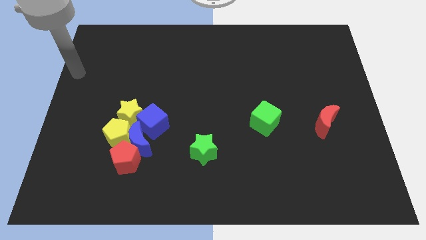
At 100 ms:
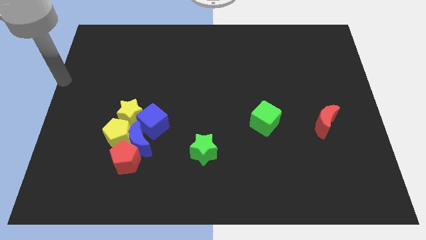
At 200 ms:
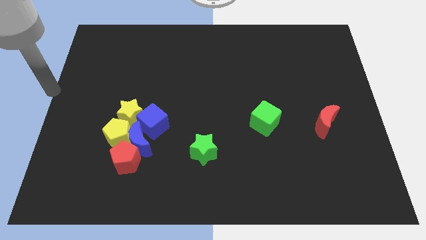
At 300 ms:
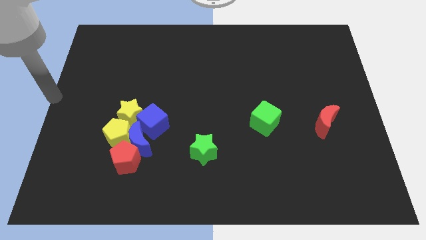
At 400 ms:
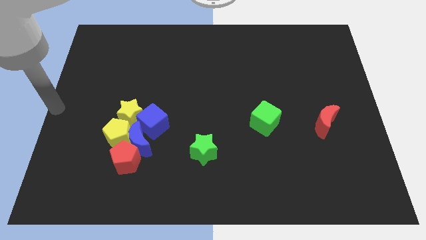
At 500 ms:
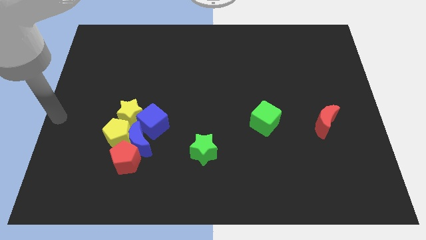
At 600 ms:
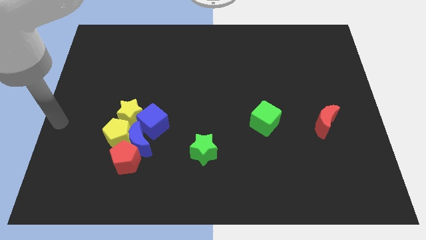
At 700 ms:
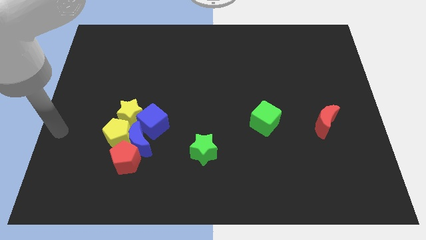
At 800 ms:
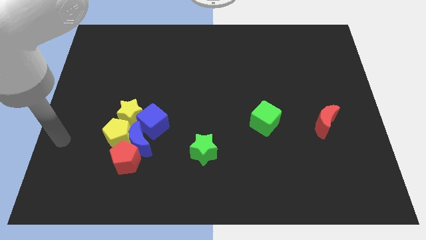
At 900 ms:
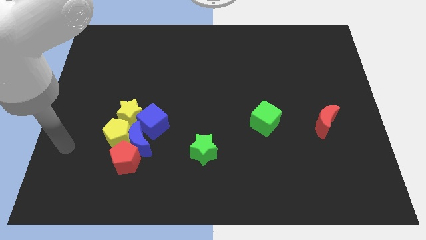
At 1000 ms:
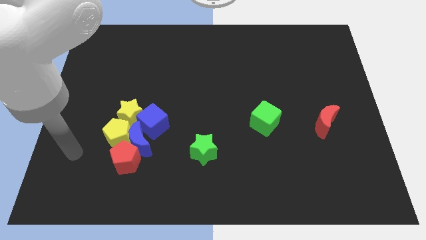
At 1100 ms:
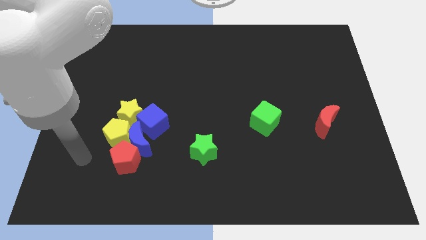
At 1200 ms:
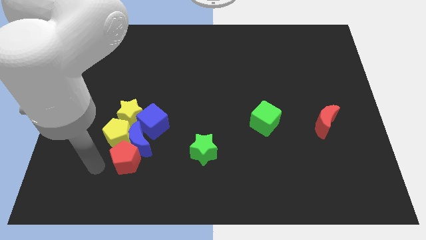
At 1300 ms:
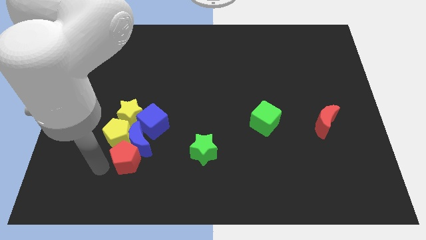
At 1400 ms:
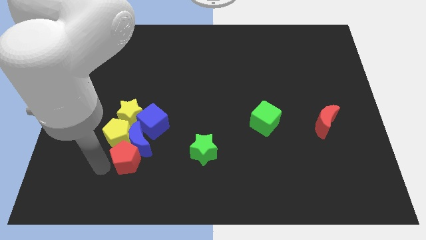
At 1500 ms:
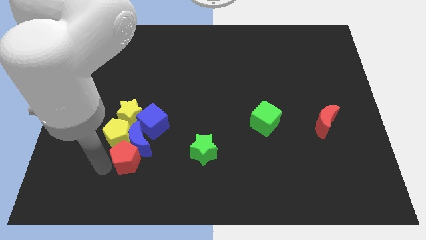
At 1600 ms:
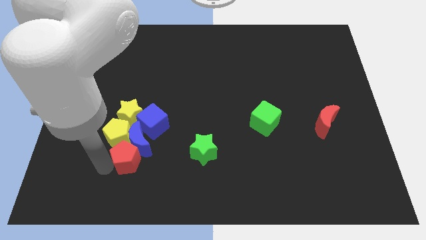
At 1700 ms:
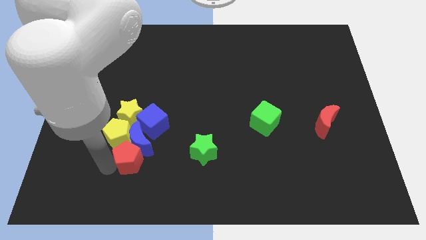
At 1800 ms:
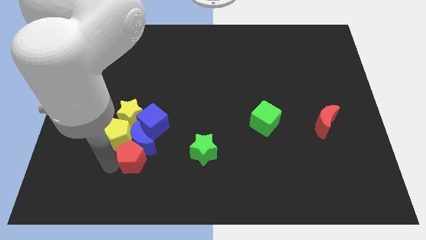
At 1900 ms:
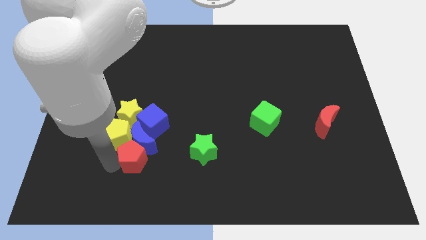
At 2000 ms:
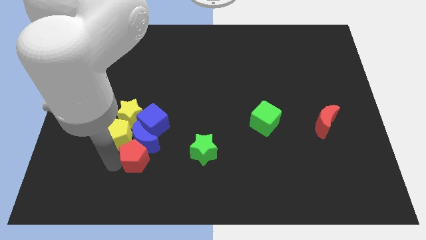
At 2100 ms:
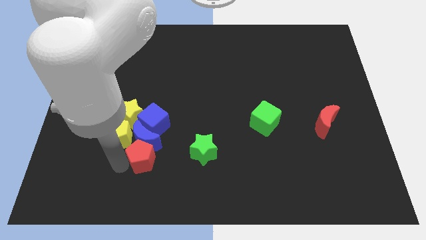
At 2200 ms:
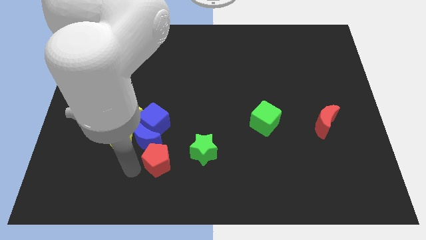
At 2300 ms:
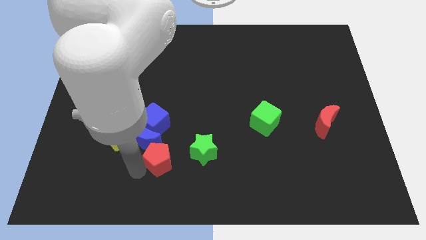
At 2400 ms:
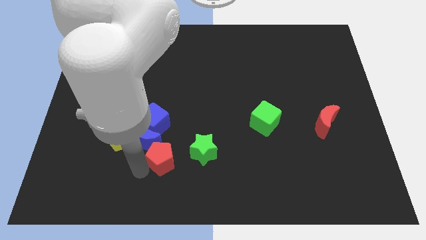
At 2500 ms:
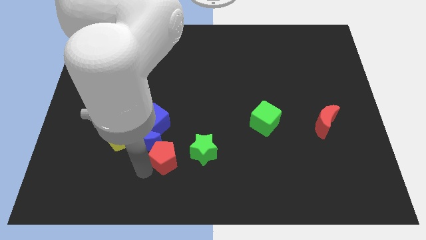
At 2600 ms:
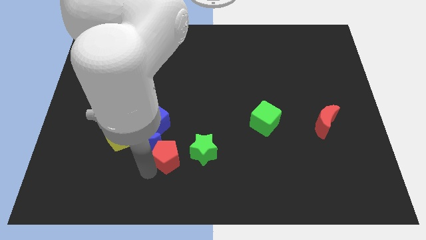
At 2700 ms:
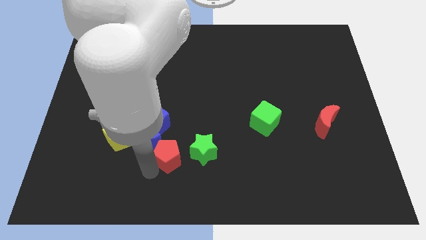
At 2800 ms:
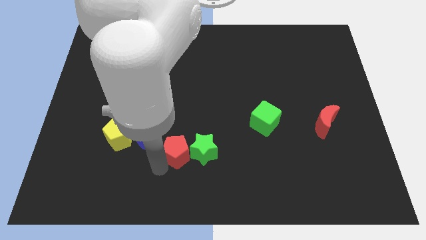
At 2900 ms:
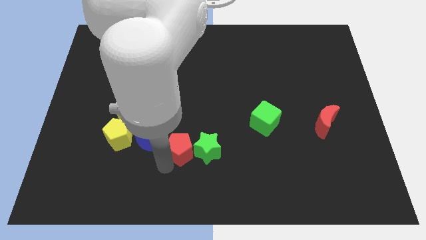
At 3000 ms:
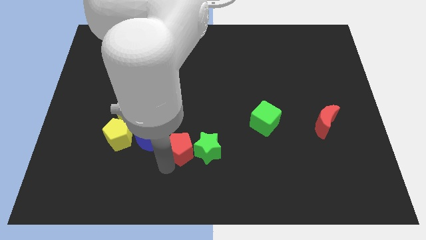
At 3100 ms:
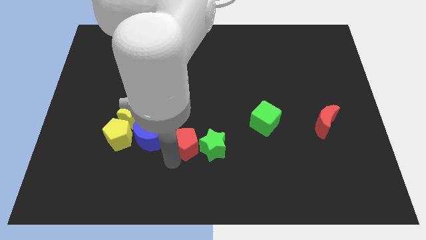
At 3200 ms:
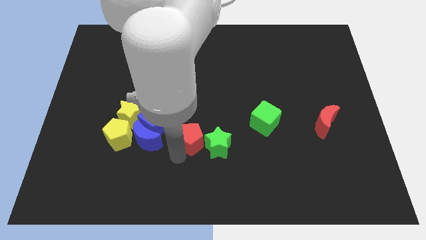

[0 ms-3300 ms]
move red pentagon close to green star

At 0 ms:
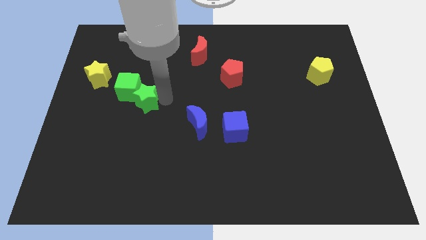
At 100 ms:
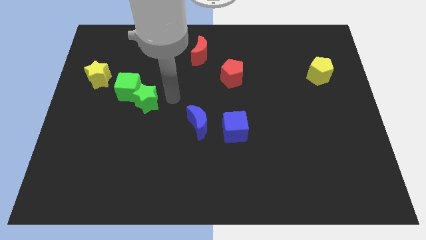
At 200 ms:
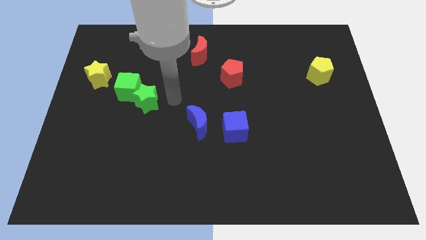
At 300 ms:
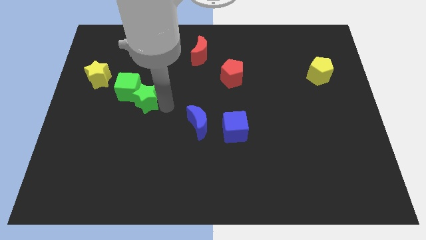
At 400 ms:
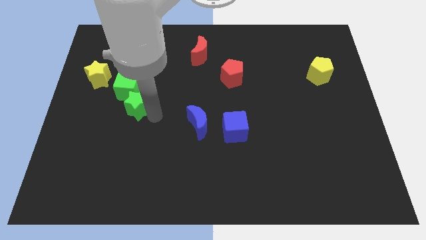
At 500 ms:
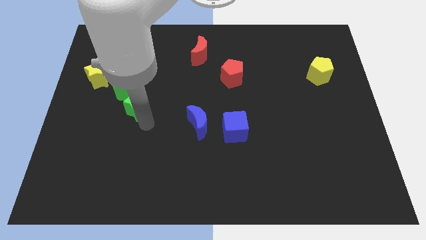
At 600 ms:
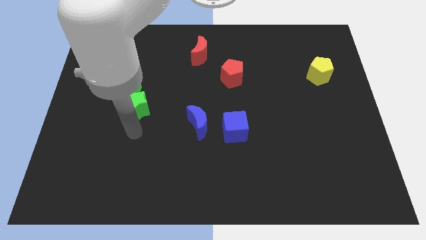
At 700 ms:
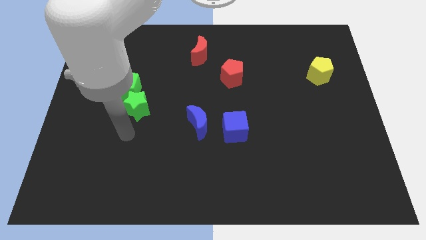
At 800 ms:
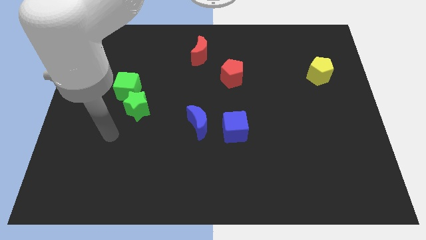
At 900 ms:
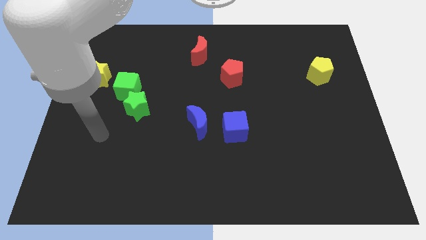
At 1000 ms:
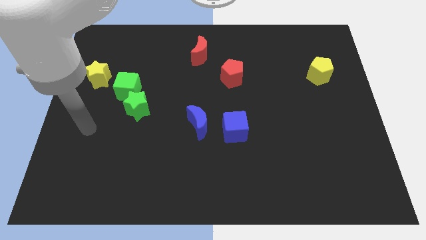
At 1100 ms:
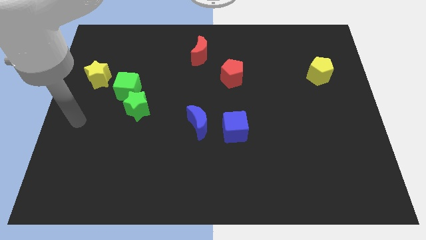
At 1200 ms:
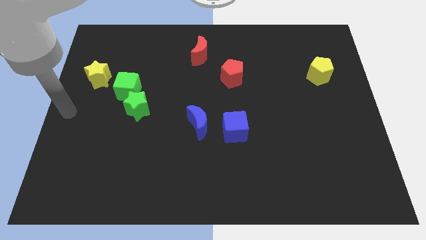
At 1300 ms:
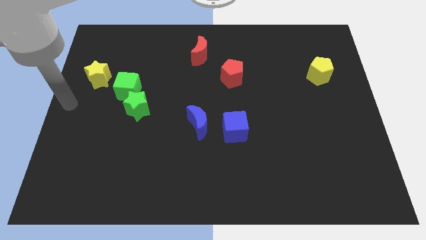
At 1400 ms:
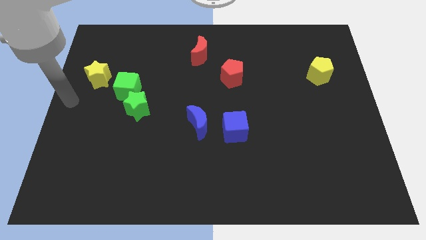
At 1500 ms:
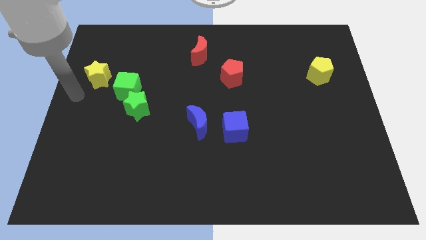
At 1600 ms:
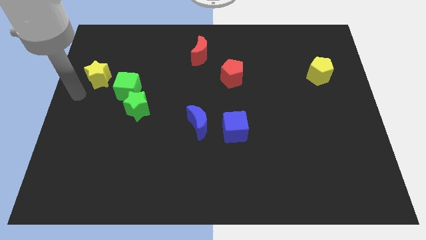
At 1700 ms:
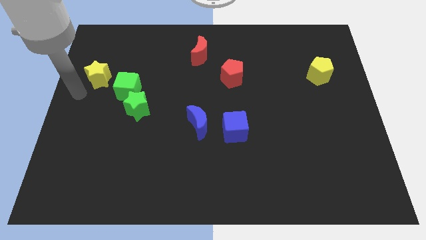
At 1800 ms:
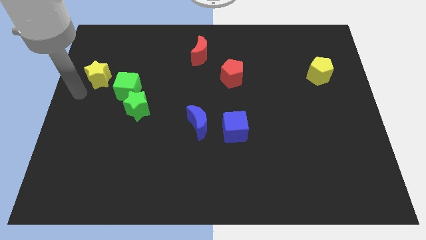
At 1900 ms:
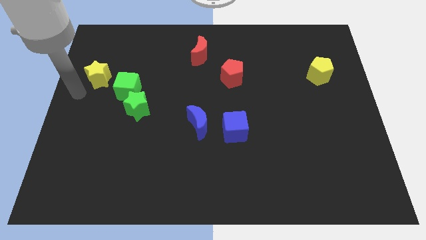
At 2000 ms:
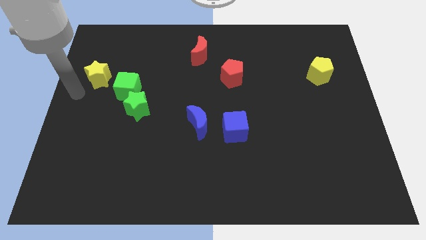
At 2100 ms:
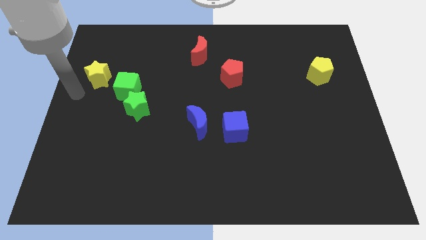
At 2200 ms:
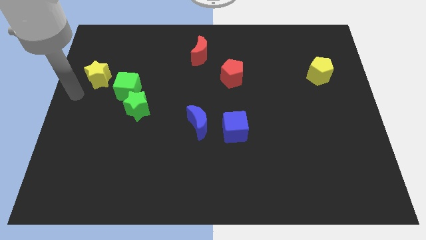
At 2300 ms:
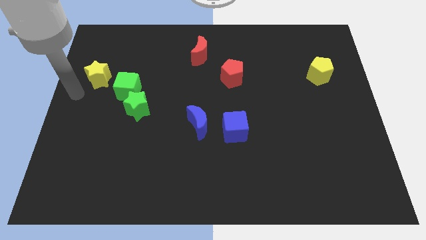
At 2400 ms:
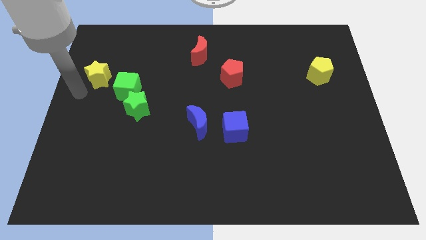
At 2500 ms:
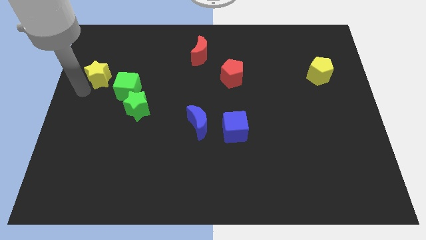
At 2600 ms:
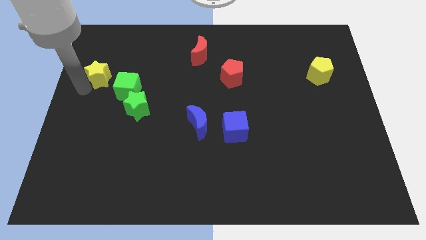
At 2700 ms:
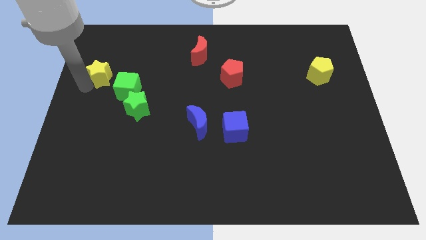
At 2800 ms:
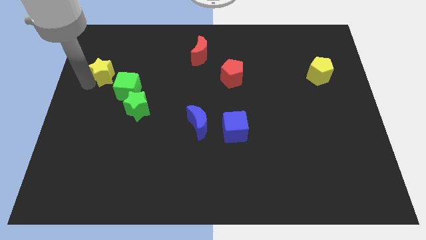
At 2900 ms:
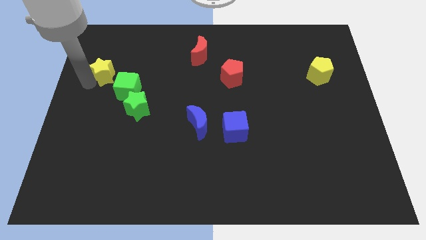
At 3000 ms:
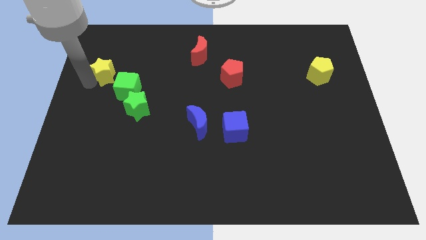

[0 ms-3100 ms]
move your arm to the bottom left of the yellow star

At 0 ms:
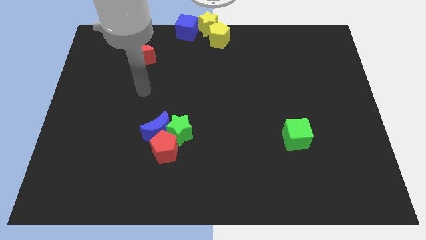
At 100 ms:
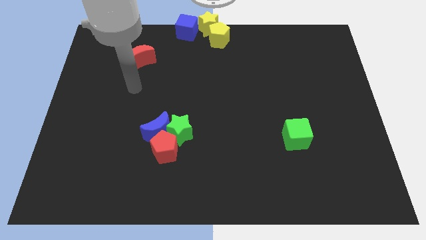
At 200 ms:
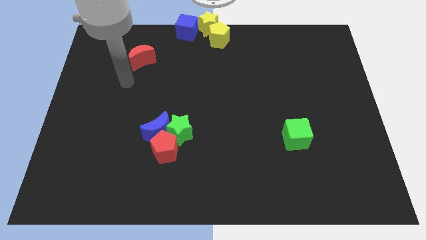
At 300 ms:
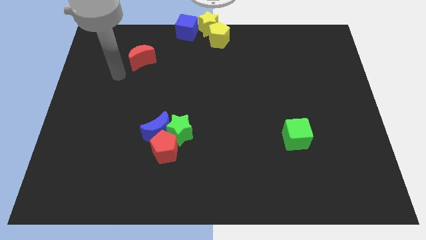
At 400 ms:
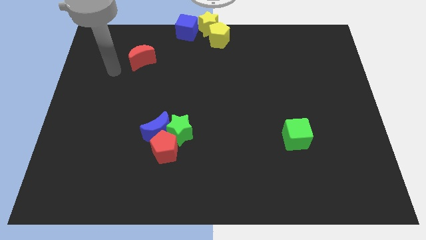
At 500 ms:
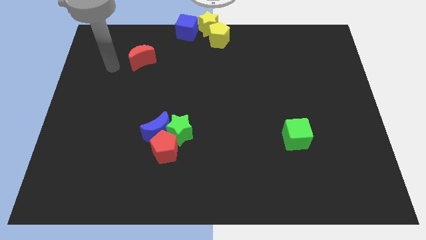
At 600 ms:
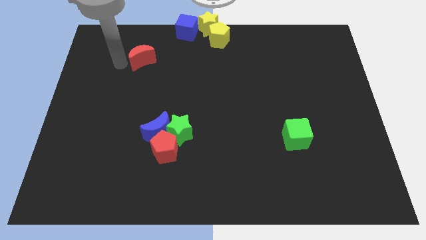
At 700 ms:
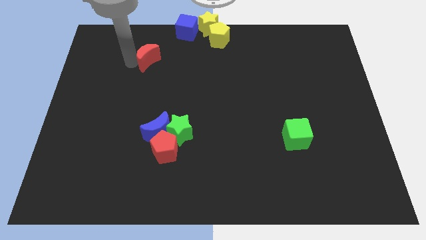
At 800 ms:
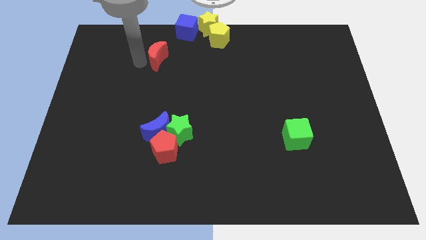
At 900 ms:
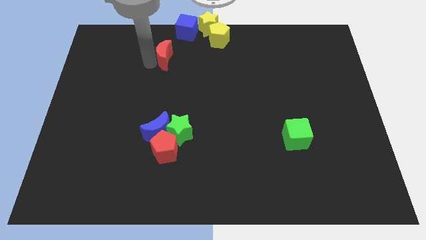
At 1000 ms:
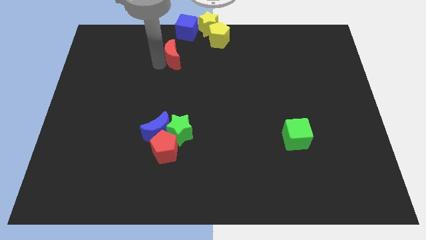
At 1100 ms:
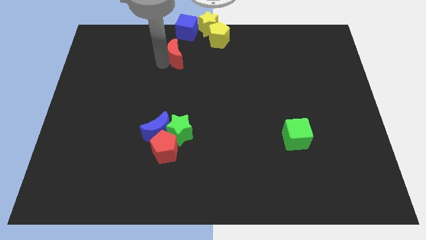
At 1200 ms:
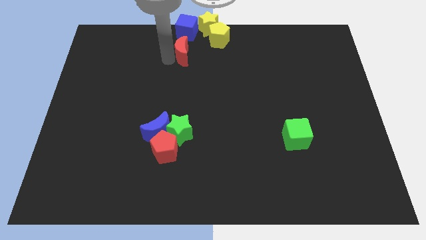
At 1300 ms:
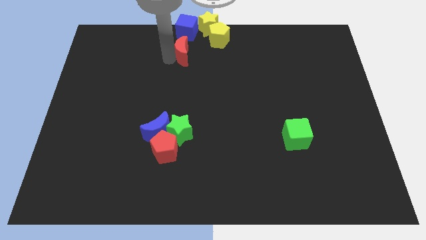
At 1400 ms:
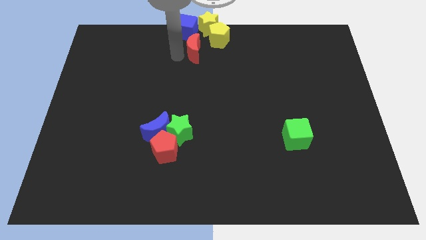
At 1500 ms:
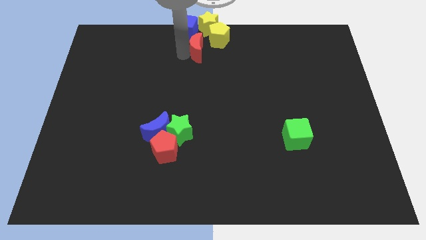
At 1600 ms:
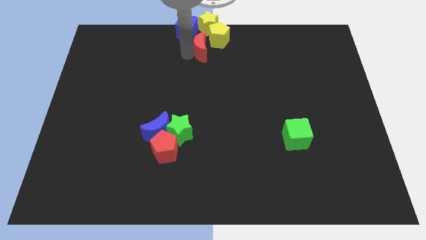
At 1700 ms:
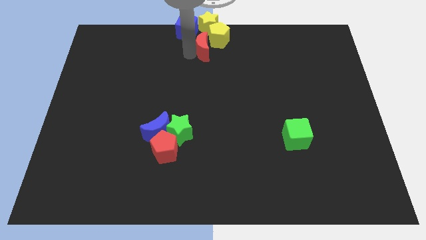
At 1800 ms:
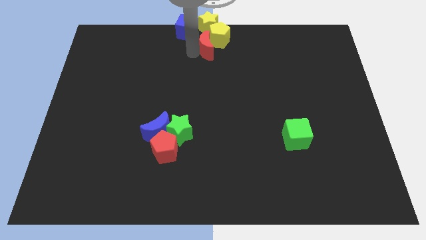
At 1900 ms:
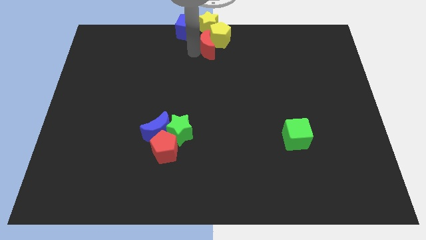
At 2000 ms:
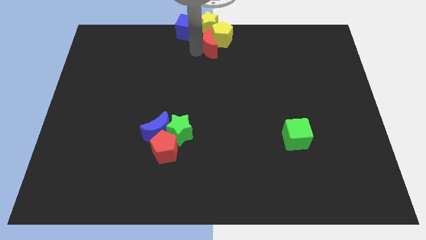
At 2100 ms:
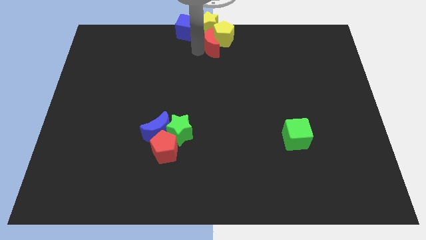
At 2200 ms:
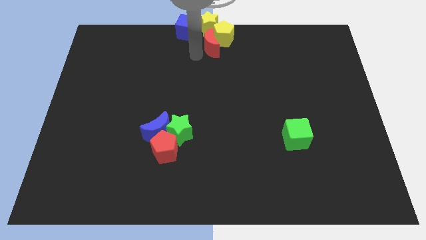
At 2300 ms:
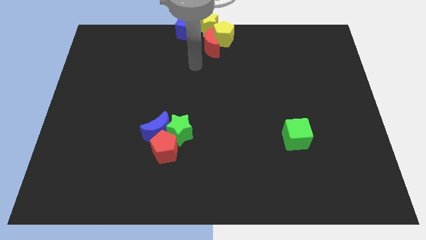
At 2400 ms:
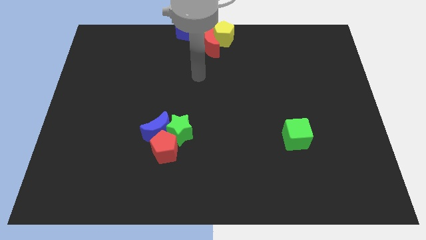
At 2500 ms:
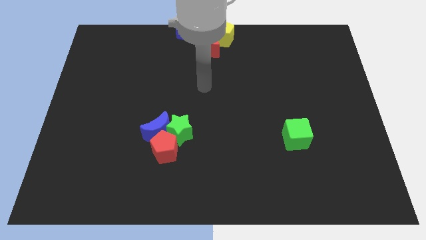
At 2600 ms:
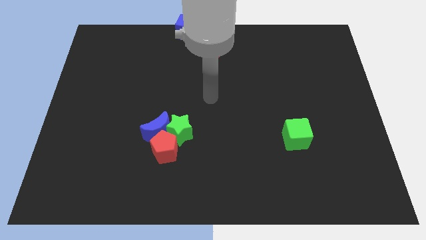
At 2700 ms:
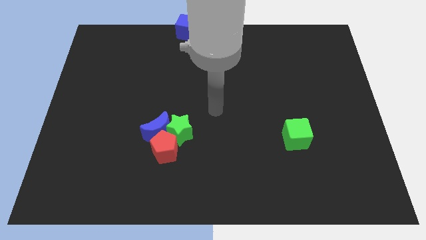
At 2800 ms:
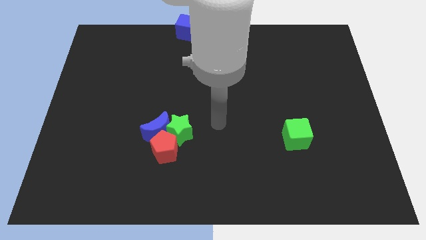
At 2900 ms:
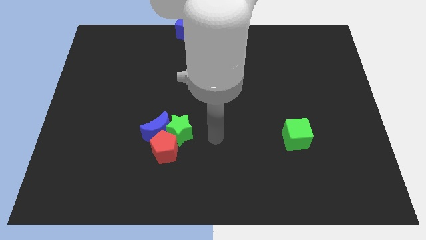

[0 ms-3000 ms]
place red crescent close to yellow pentagon
